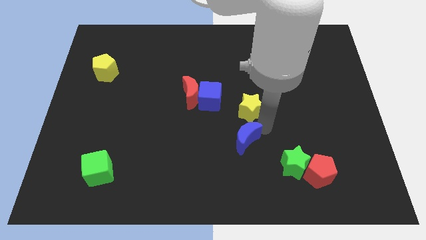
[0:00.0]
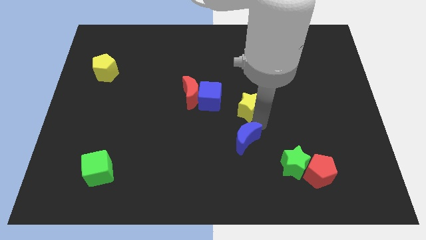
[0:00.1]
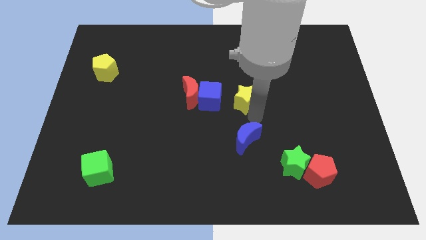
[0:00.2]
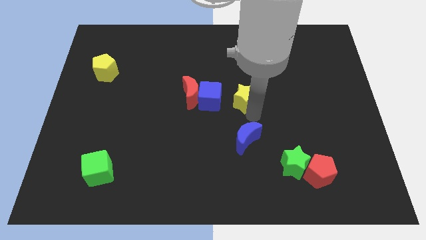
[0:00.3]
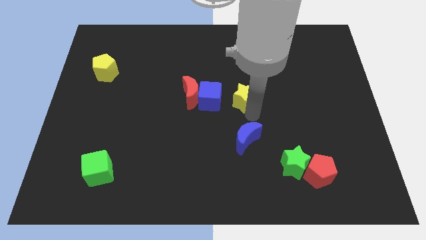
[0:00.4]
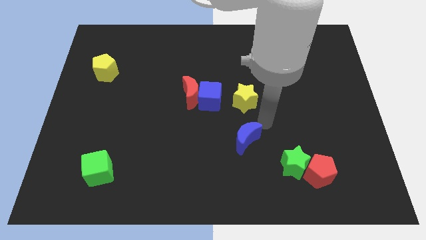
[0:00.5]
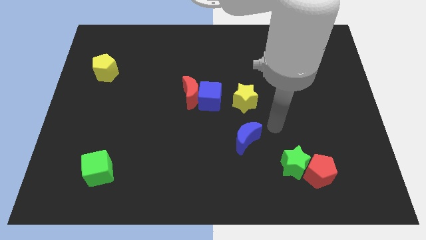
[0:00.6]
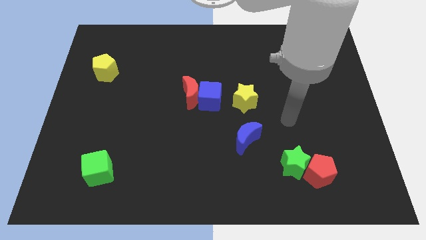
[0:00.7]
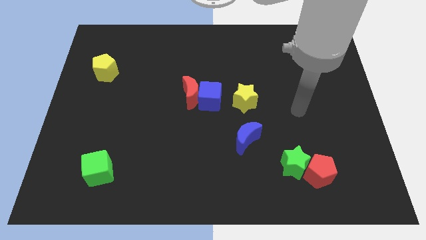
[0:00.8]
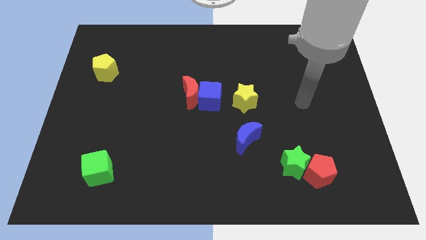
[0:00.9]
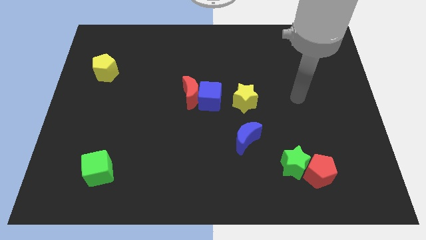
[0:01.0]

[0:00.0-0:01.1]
move yellow star up to the right of blue cube

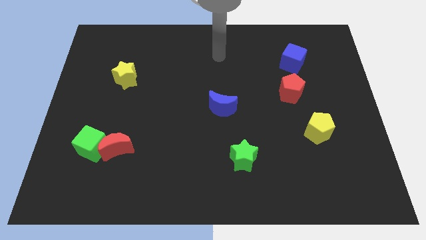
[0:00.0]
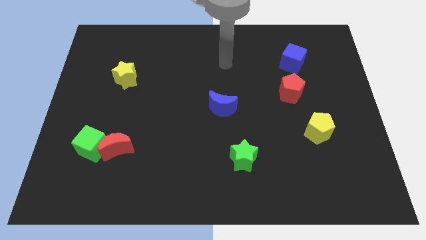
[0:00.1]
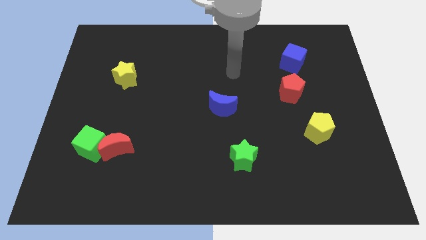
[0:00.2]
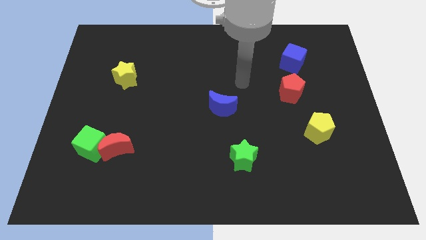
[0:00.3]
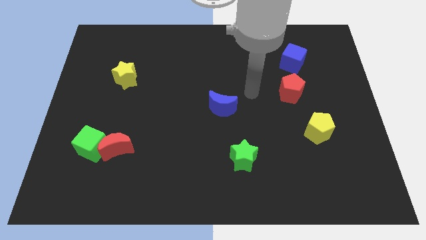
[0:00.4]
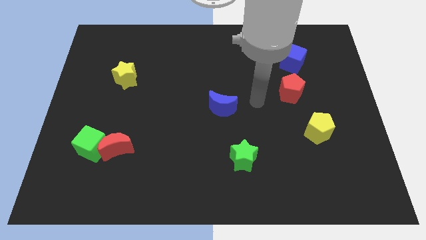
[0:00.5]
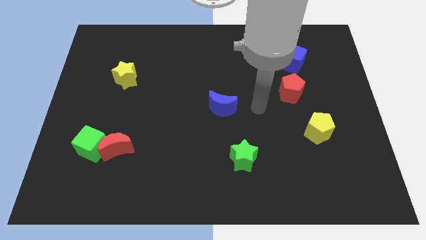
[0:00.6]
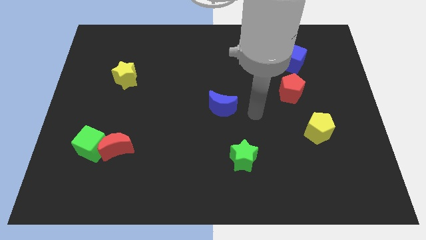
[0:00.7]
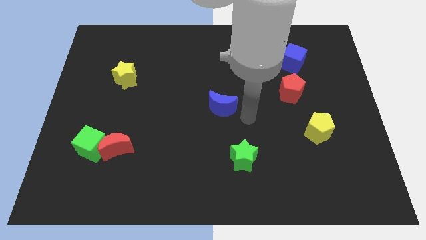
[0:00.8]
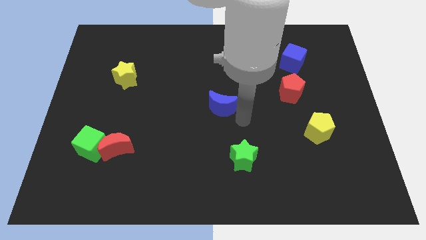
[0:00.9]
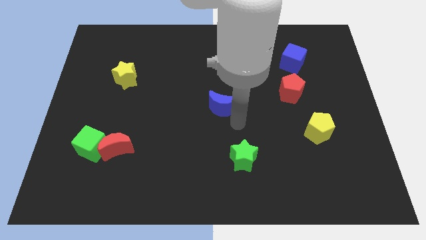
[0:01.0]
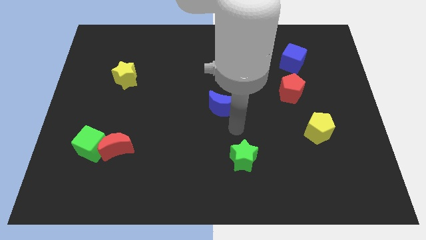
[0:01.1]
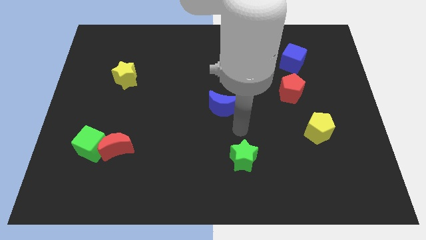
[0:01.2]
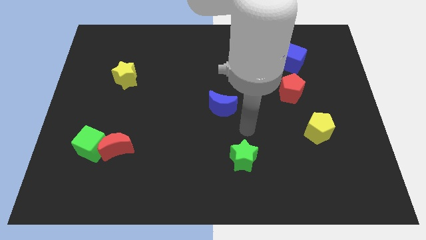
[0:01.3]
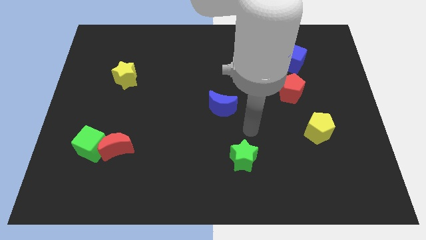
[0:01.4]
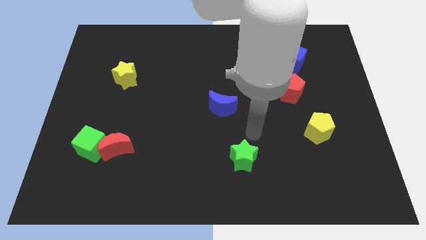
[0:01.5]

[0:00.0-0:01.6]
point your arm at the top of green star

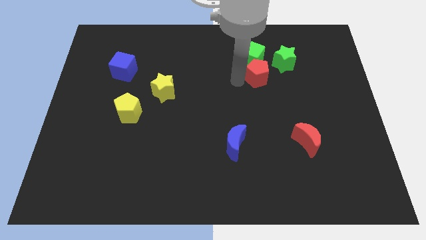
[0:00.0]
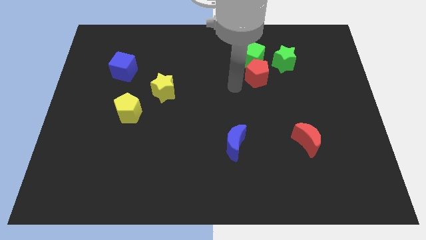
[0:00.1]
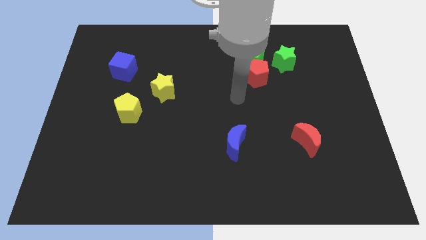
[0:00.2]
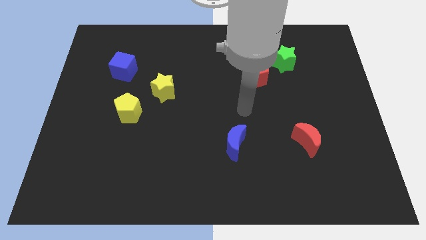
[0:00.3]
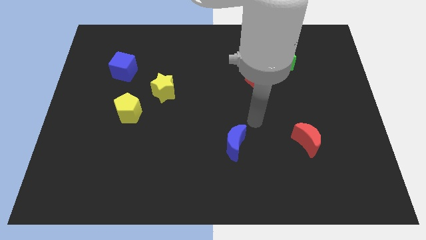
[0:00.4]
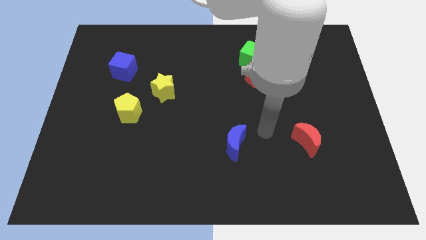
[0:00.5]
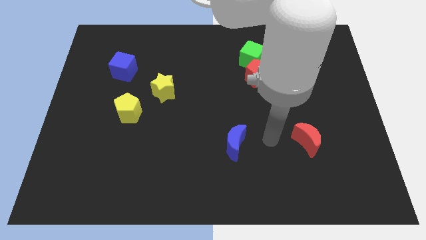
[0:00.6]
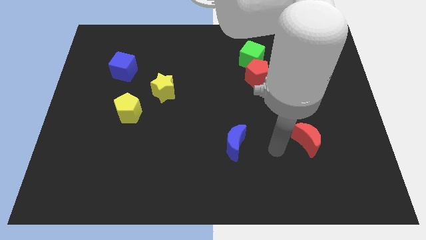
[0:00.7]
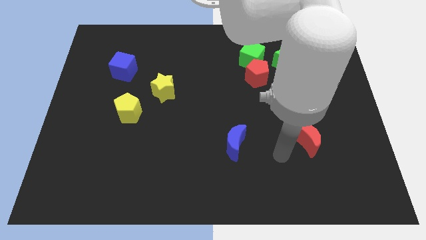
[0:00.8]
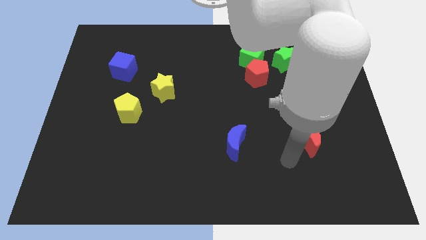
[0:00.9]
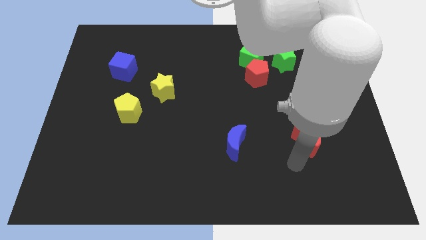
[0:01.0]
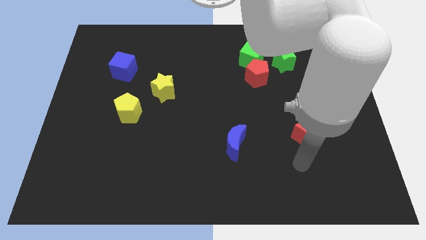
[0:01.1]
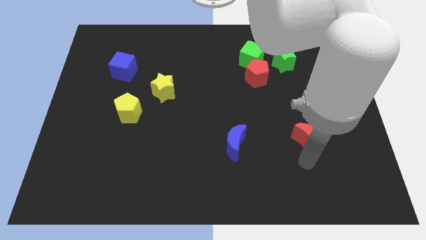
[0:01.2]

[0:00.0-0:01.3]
move your arm from red pentagon to the bottom of the red crescent

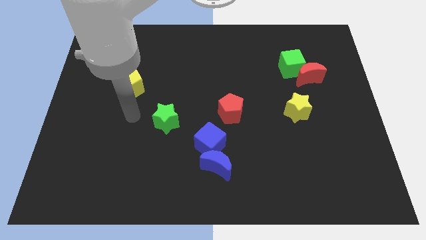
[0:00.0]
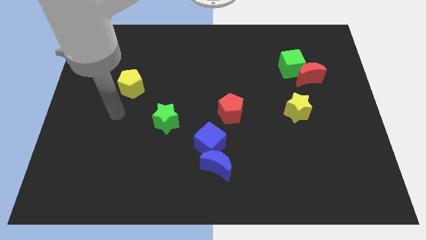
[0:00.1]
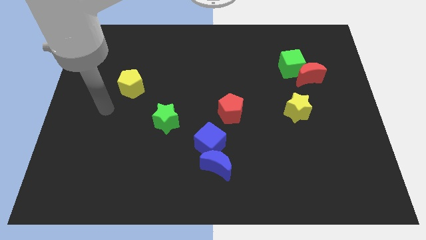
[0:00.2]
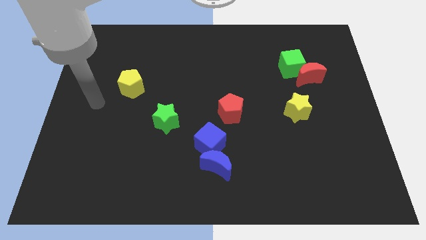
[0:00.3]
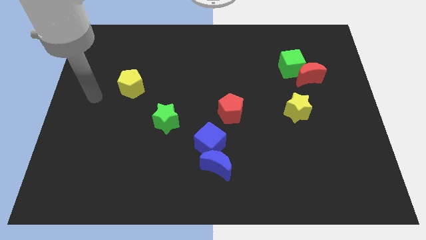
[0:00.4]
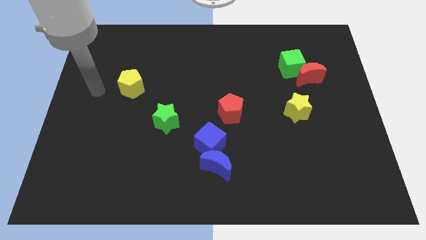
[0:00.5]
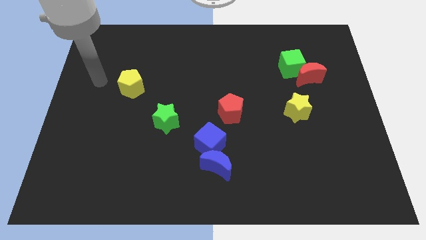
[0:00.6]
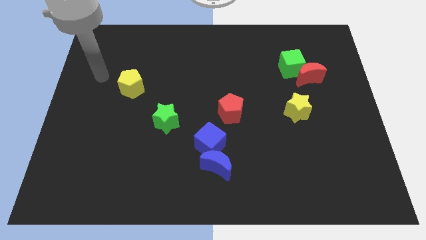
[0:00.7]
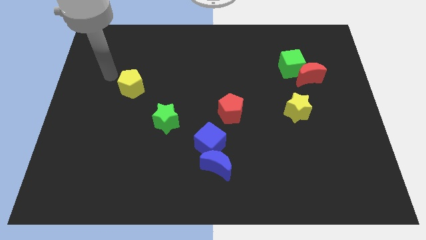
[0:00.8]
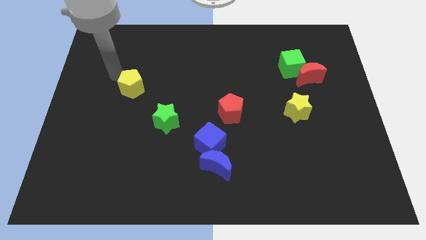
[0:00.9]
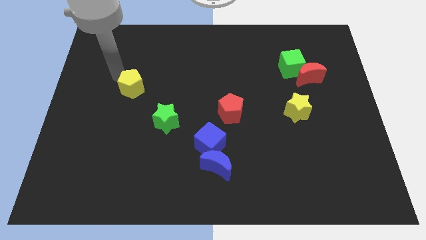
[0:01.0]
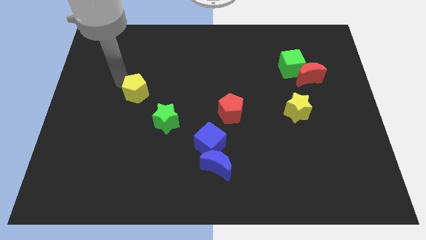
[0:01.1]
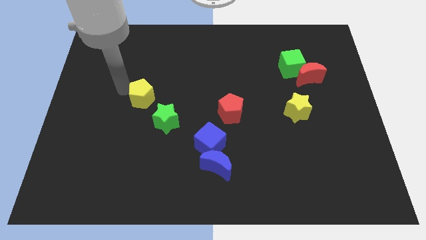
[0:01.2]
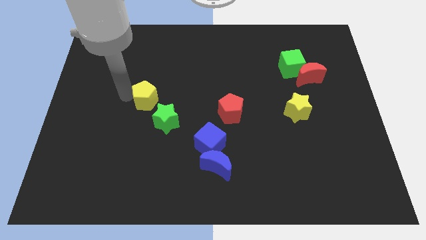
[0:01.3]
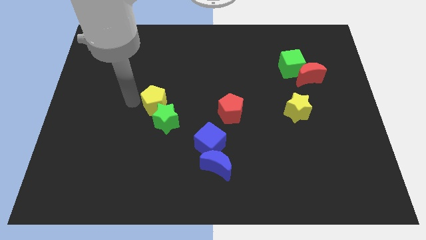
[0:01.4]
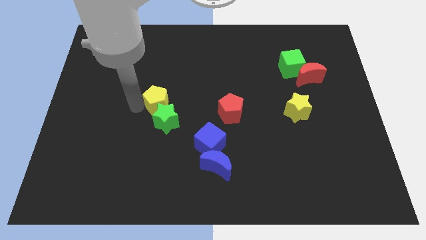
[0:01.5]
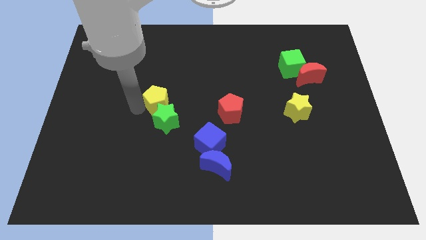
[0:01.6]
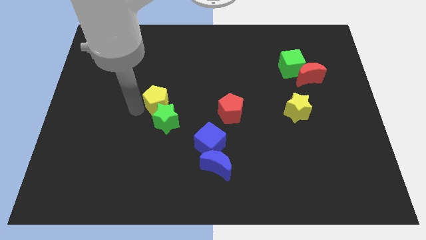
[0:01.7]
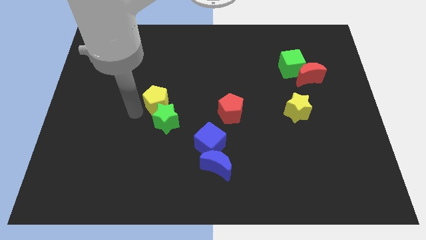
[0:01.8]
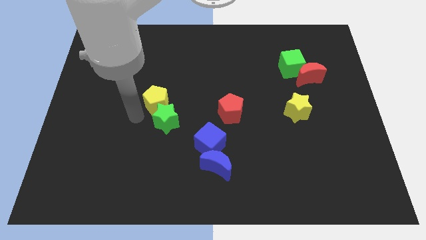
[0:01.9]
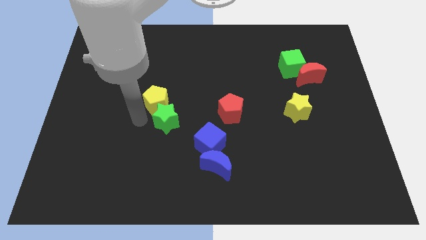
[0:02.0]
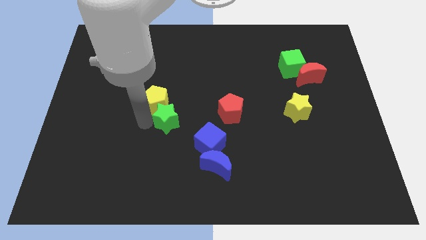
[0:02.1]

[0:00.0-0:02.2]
move the yellow pentagon into the green star

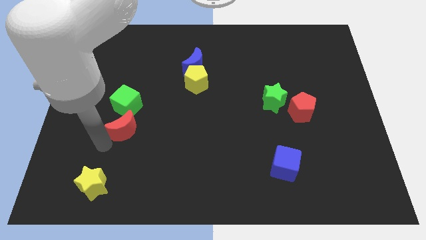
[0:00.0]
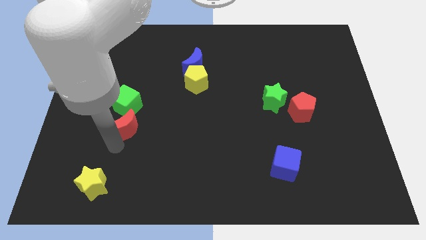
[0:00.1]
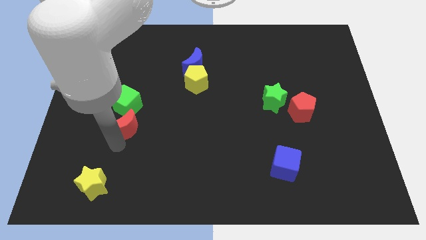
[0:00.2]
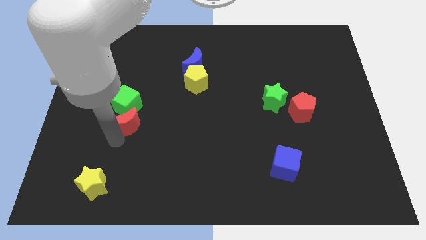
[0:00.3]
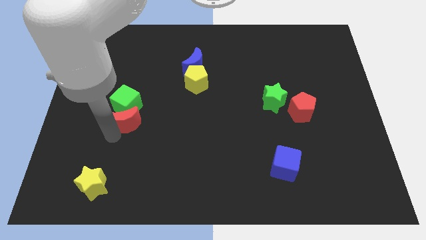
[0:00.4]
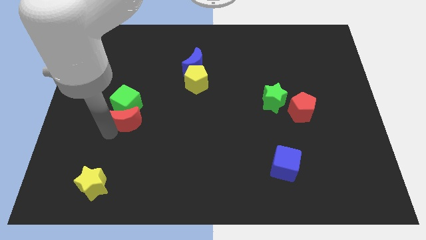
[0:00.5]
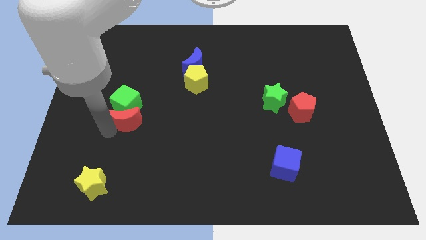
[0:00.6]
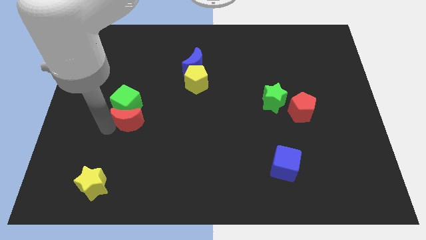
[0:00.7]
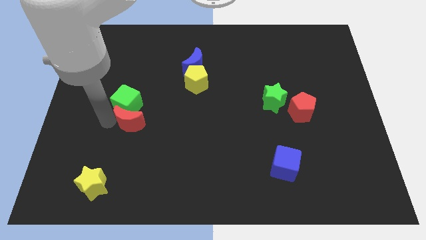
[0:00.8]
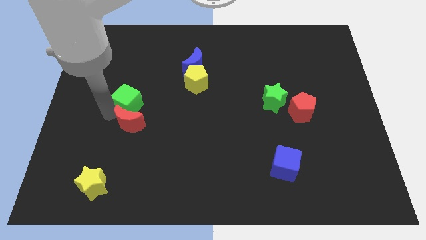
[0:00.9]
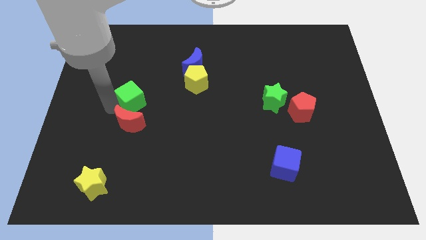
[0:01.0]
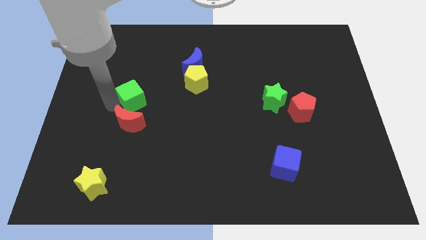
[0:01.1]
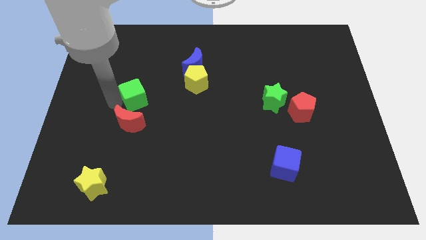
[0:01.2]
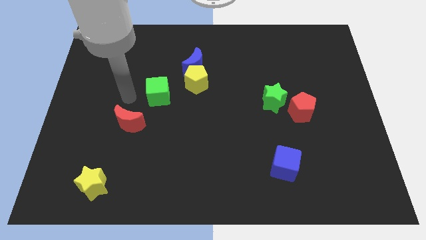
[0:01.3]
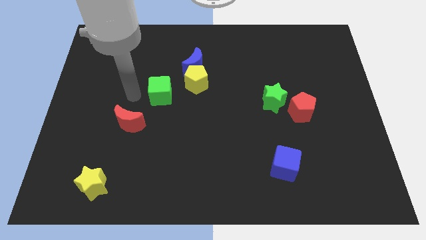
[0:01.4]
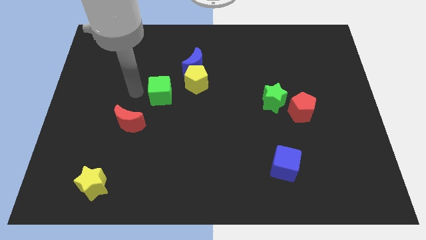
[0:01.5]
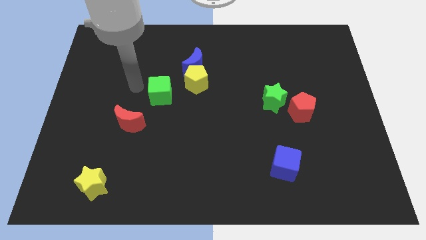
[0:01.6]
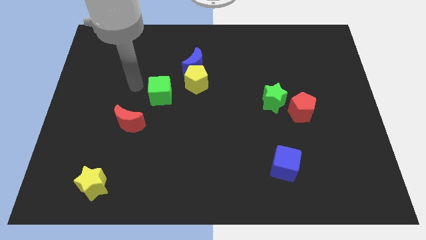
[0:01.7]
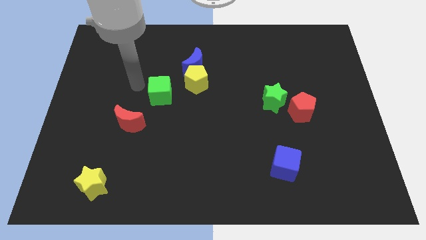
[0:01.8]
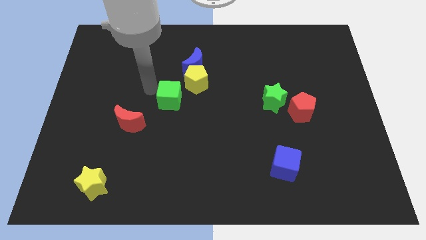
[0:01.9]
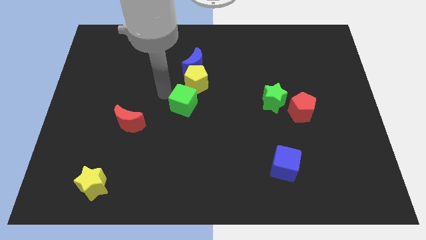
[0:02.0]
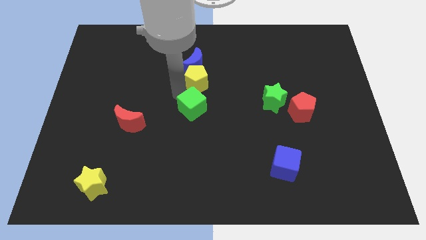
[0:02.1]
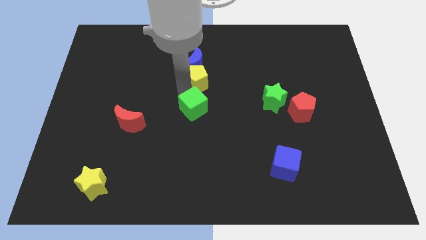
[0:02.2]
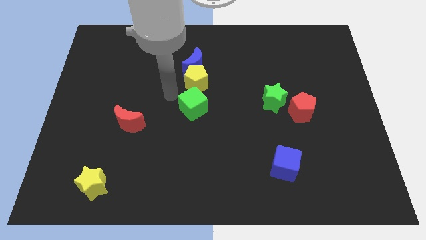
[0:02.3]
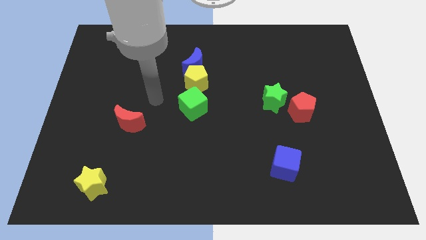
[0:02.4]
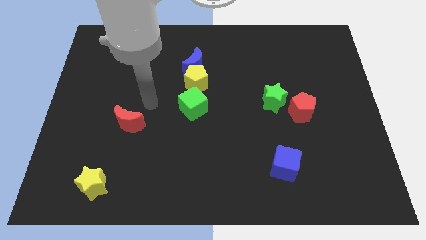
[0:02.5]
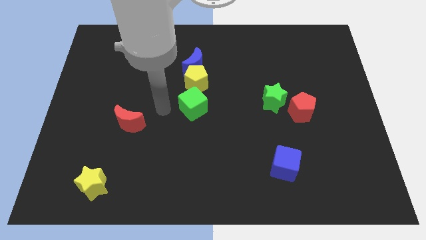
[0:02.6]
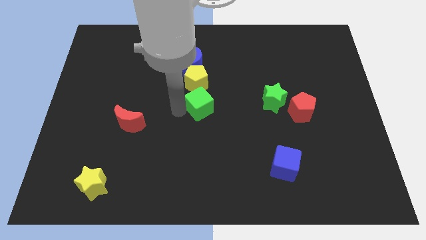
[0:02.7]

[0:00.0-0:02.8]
place the green cube under the yellow pentagon
